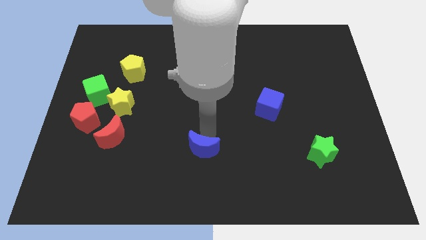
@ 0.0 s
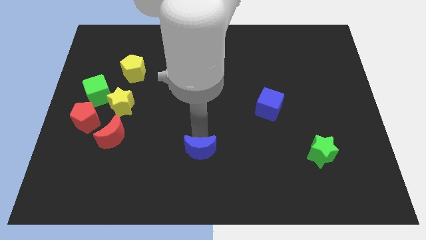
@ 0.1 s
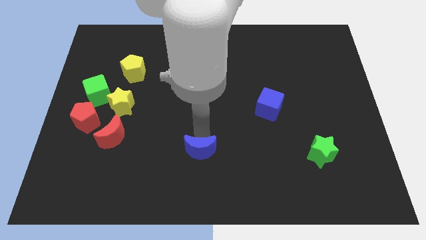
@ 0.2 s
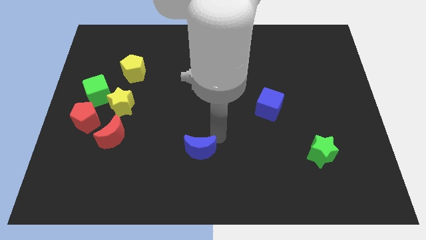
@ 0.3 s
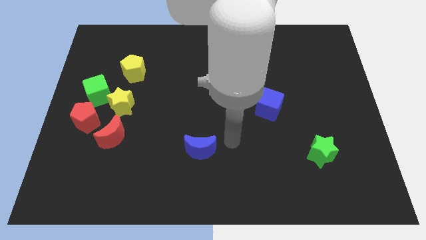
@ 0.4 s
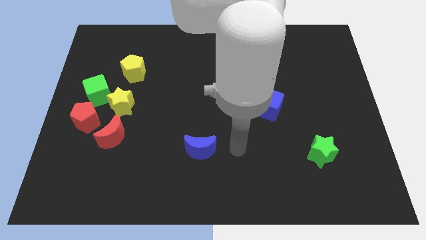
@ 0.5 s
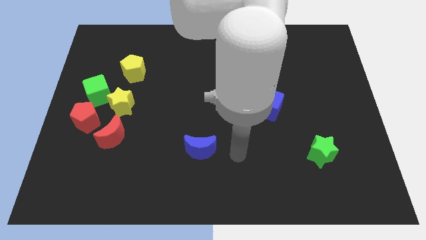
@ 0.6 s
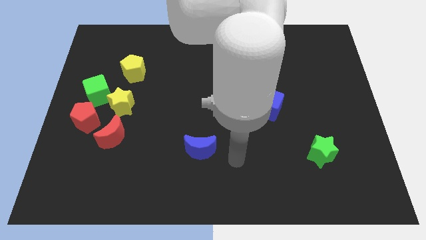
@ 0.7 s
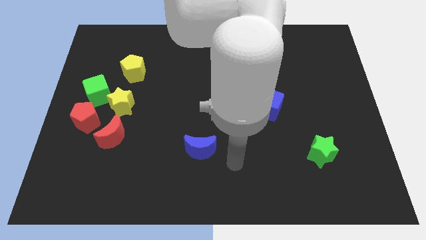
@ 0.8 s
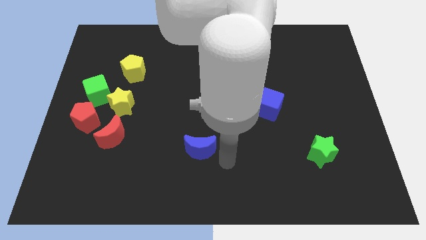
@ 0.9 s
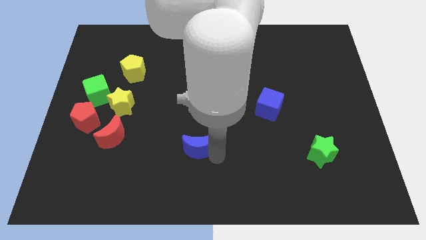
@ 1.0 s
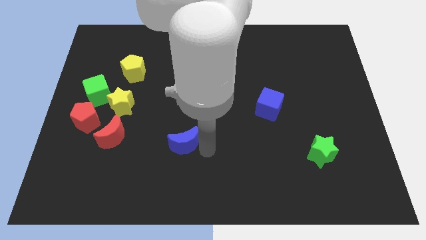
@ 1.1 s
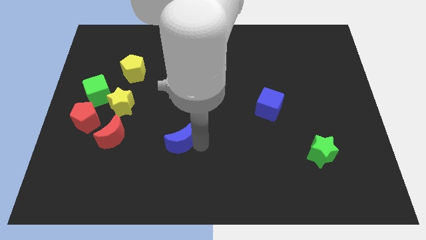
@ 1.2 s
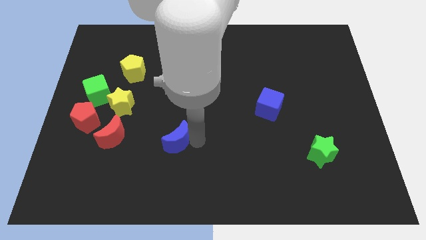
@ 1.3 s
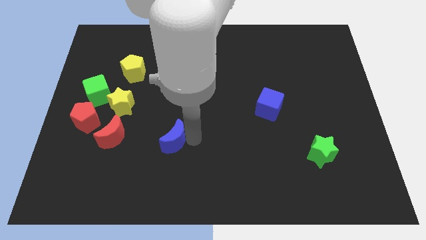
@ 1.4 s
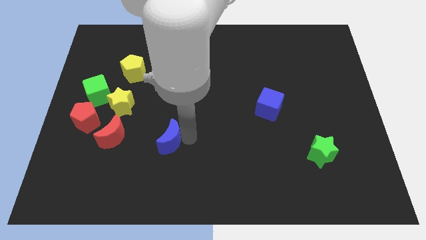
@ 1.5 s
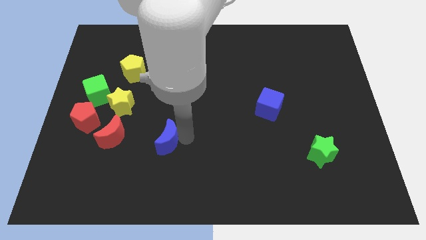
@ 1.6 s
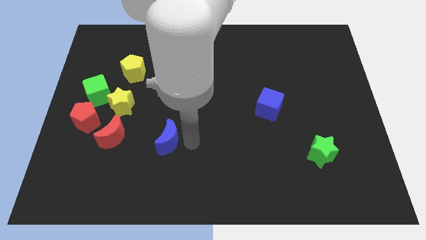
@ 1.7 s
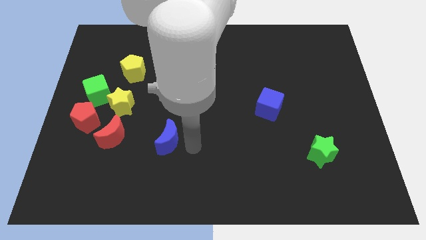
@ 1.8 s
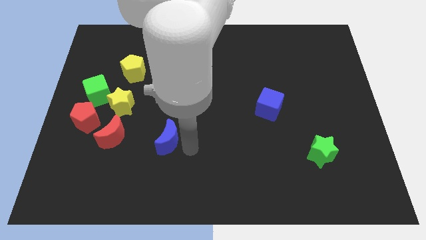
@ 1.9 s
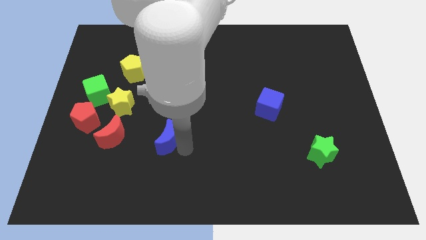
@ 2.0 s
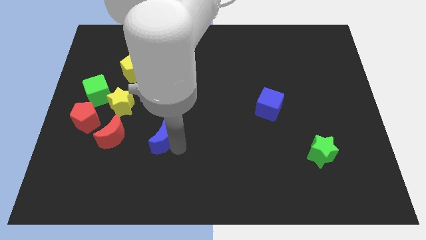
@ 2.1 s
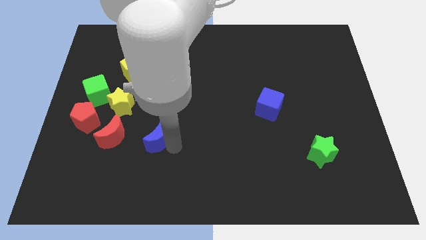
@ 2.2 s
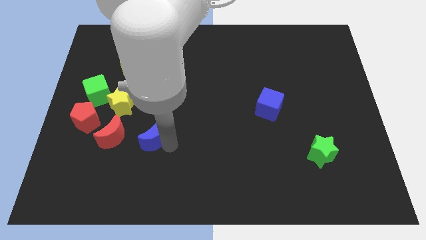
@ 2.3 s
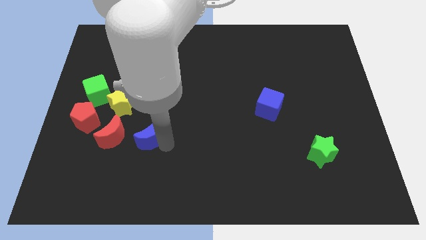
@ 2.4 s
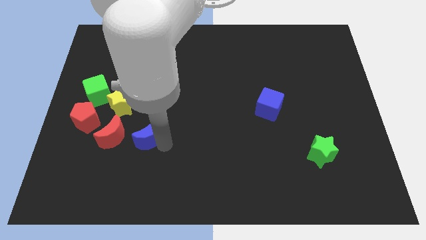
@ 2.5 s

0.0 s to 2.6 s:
place the blue moon parallel to red moon

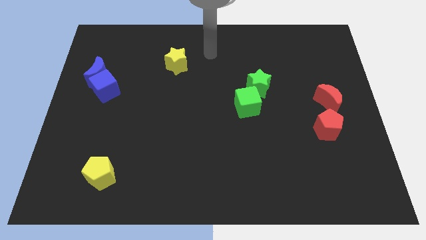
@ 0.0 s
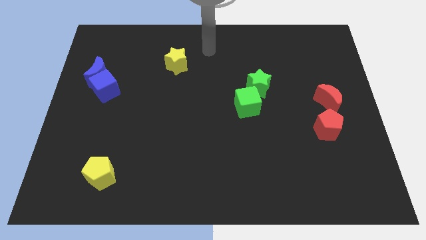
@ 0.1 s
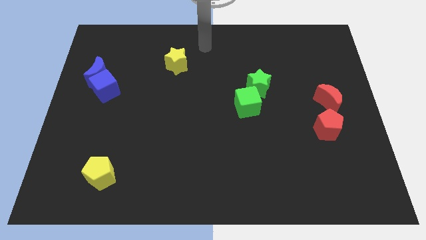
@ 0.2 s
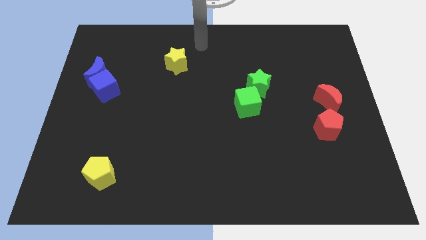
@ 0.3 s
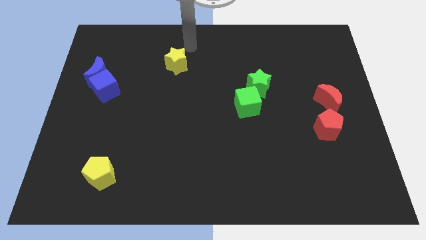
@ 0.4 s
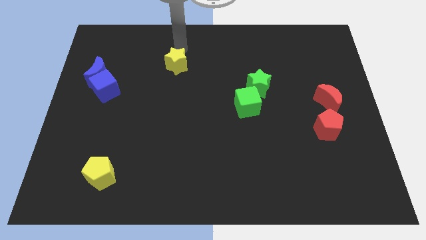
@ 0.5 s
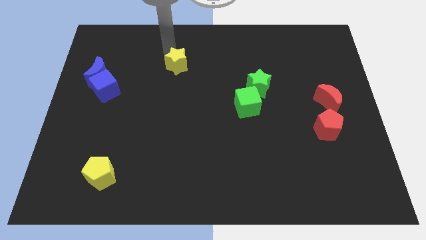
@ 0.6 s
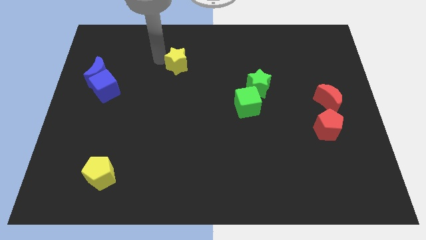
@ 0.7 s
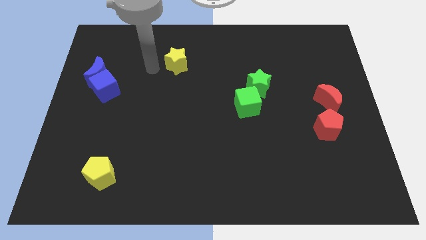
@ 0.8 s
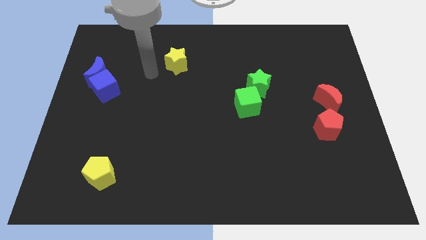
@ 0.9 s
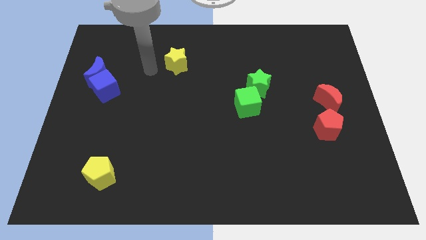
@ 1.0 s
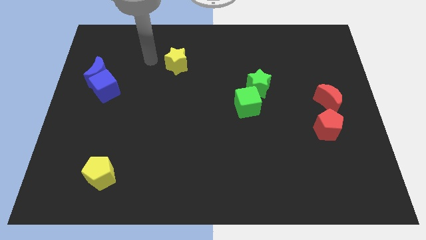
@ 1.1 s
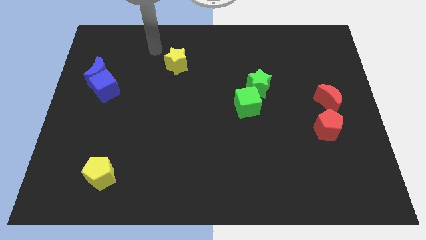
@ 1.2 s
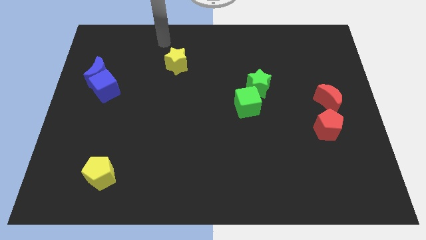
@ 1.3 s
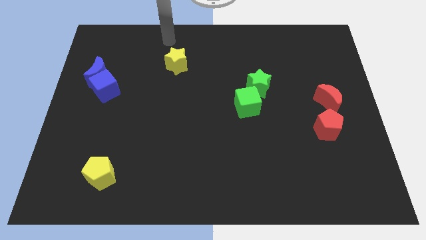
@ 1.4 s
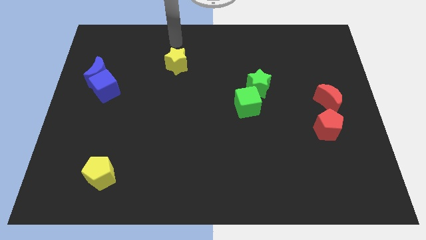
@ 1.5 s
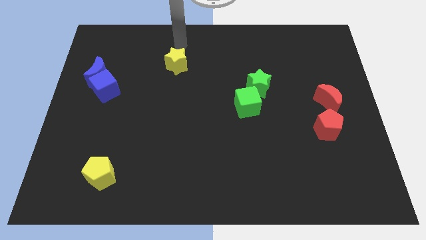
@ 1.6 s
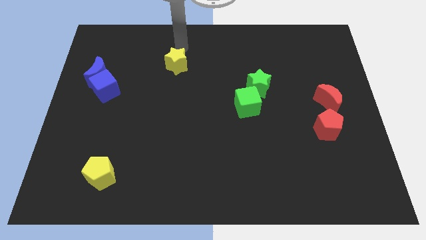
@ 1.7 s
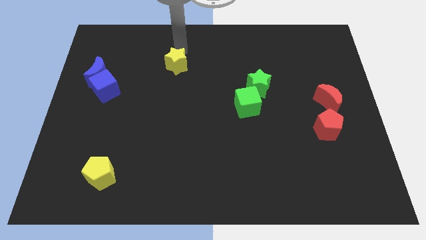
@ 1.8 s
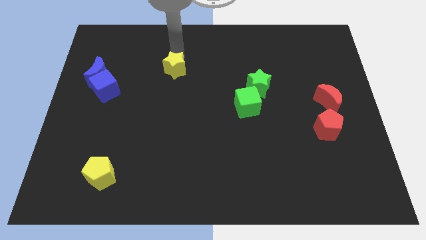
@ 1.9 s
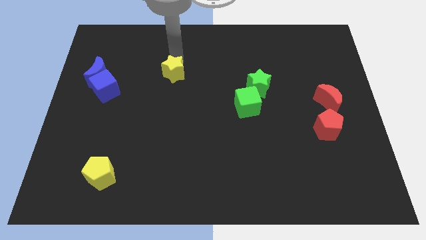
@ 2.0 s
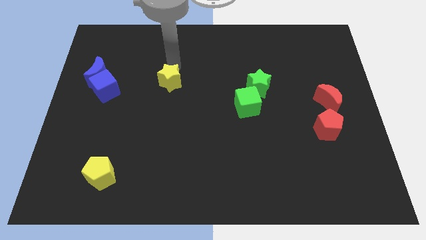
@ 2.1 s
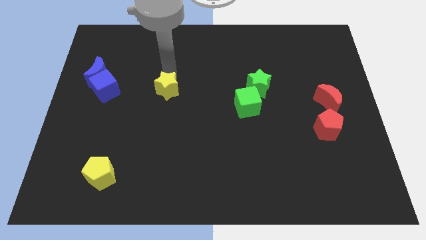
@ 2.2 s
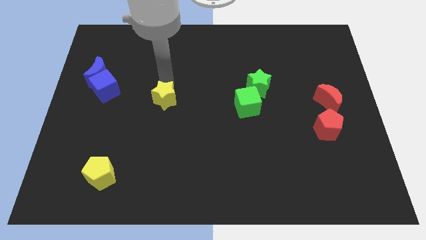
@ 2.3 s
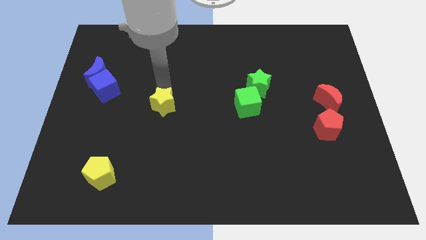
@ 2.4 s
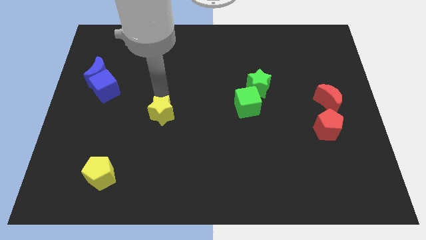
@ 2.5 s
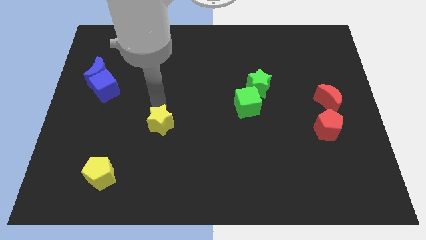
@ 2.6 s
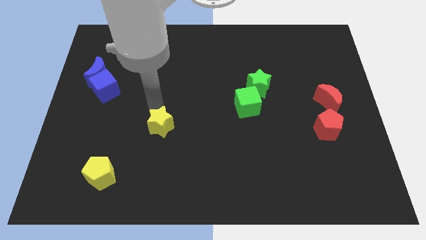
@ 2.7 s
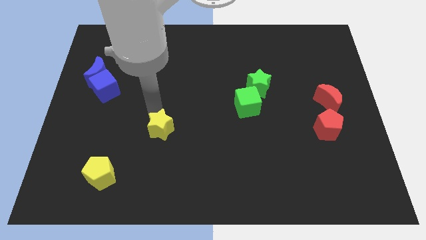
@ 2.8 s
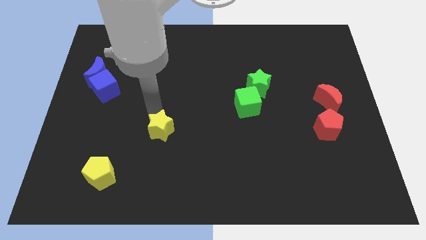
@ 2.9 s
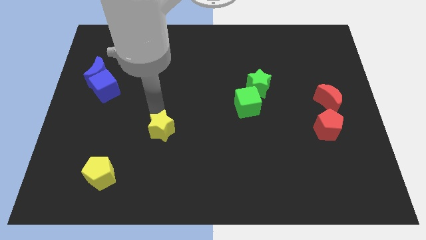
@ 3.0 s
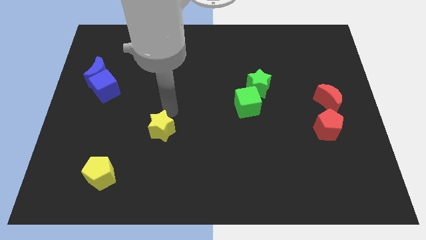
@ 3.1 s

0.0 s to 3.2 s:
place the yellow star diagonally at the bottom right of the blue cube

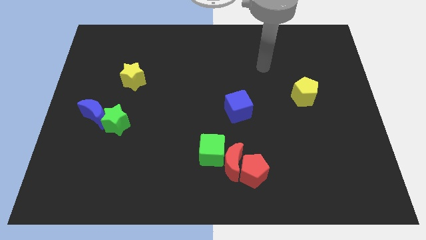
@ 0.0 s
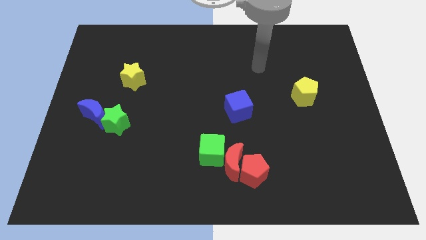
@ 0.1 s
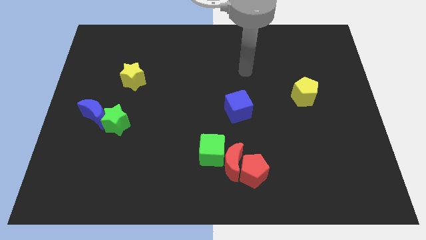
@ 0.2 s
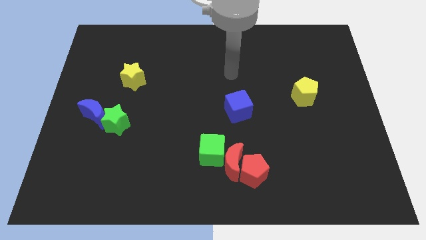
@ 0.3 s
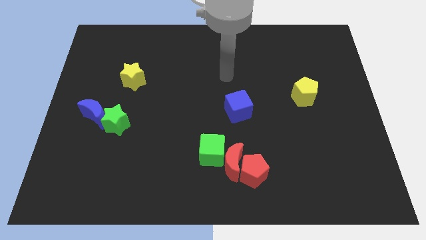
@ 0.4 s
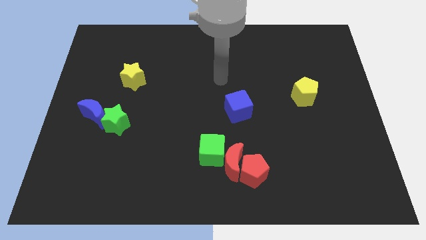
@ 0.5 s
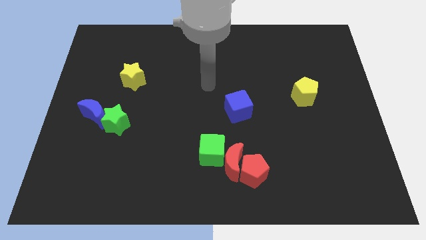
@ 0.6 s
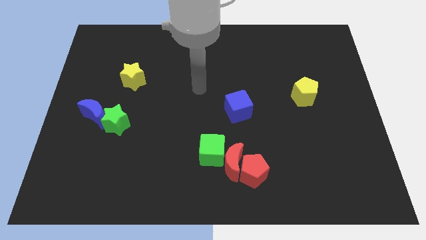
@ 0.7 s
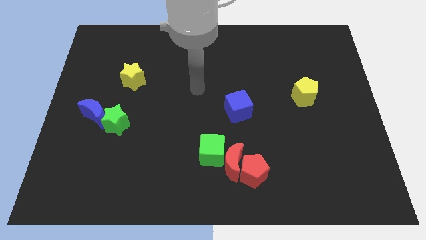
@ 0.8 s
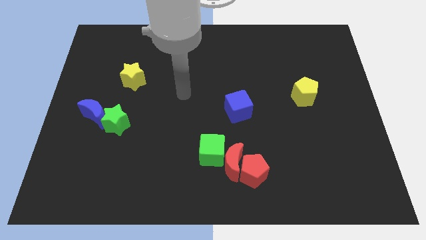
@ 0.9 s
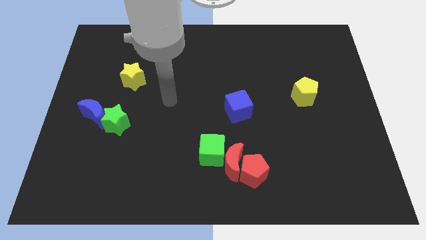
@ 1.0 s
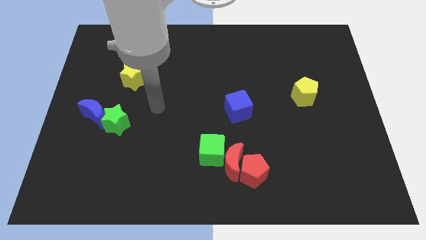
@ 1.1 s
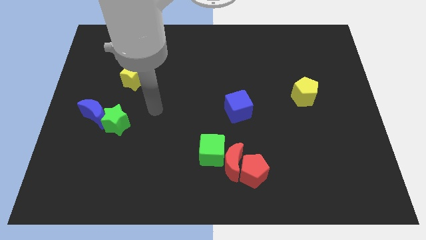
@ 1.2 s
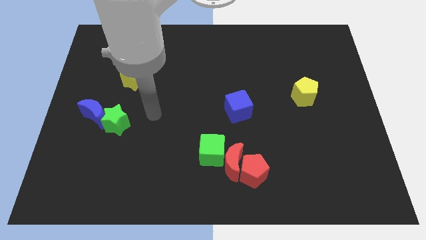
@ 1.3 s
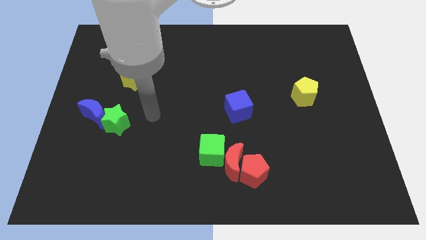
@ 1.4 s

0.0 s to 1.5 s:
move the arm towards the green star

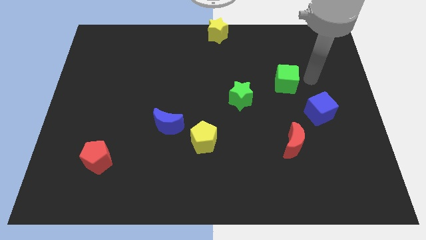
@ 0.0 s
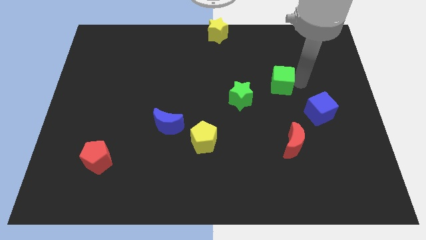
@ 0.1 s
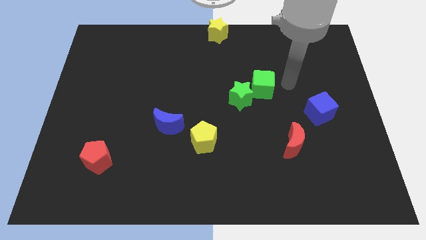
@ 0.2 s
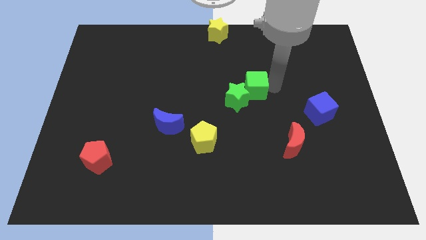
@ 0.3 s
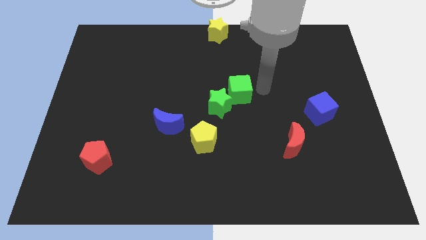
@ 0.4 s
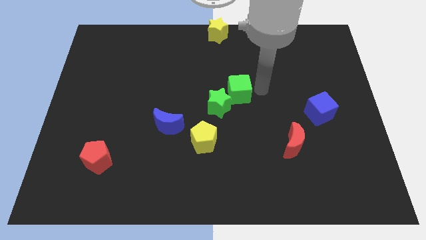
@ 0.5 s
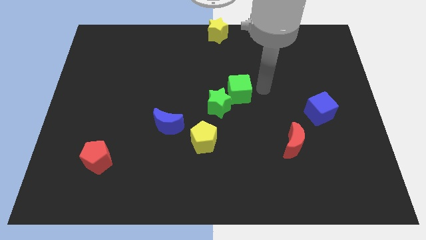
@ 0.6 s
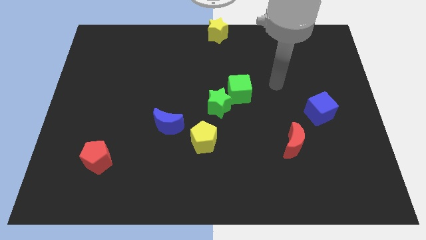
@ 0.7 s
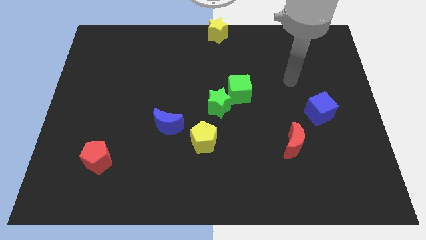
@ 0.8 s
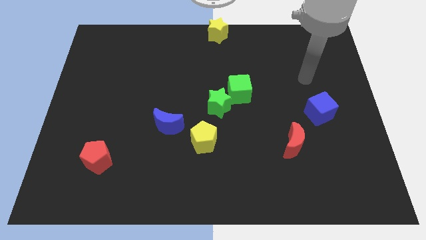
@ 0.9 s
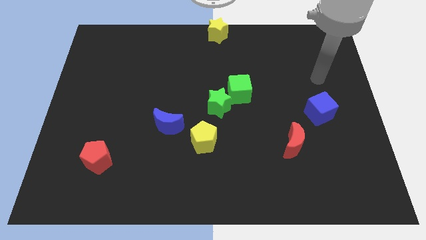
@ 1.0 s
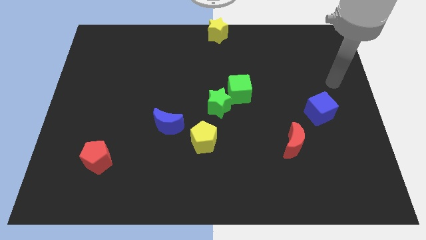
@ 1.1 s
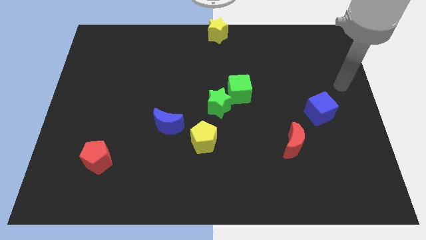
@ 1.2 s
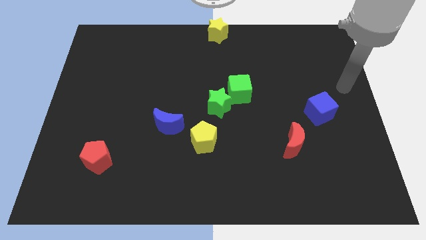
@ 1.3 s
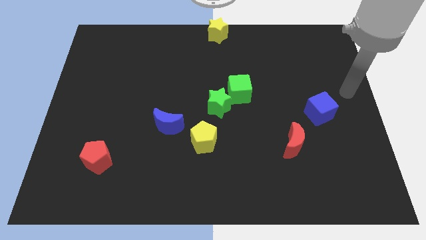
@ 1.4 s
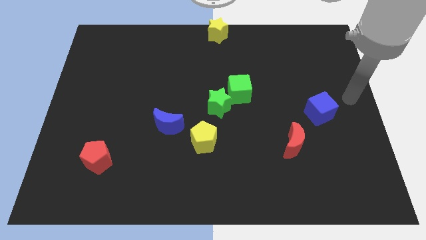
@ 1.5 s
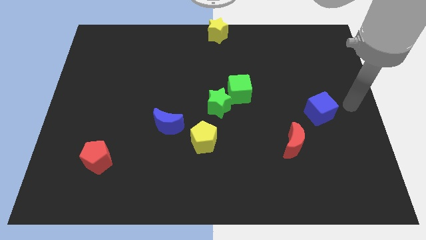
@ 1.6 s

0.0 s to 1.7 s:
push the green cube towards the green star

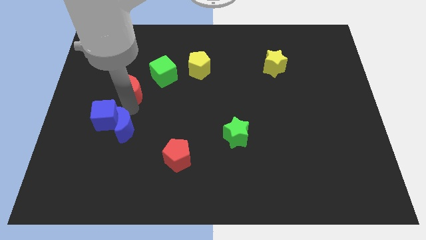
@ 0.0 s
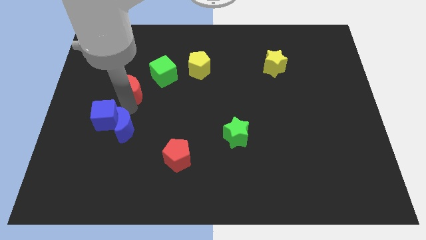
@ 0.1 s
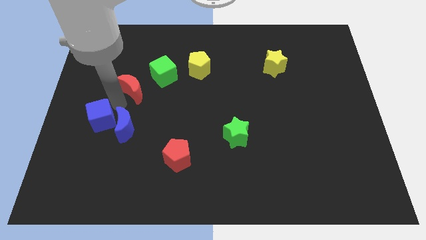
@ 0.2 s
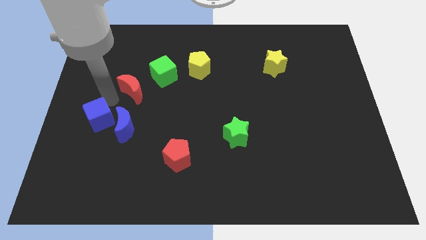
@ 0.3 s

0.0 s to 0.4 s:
separate the blue cube from red crescent
